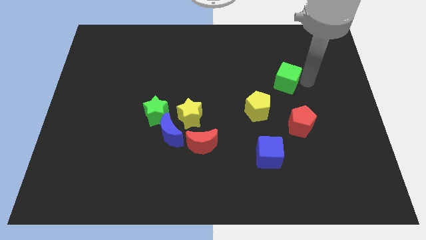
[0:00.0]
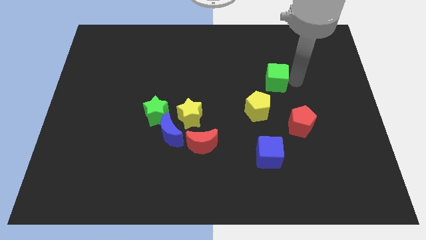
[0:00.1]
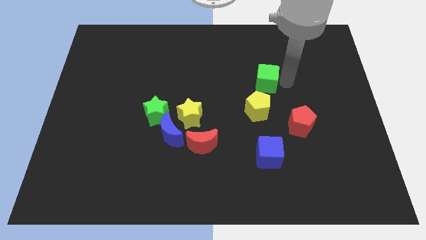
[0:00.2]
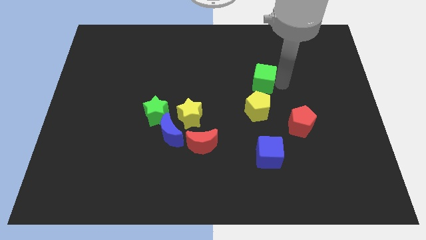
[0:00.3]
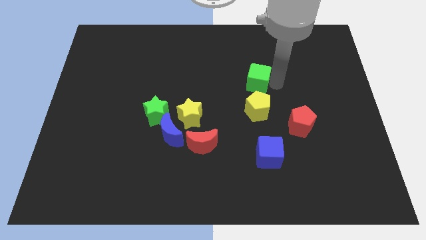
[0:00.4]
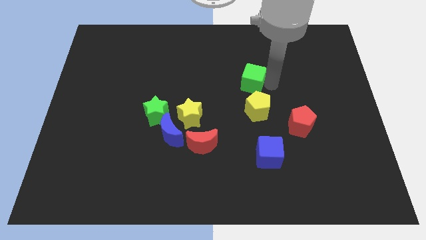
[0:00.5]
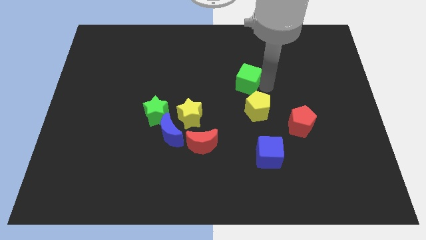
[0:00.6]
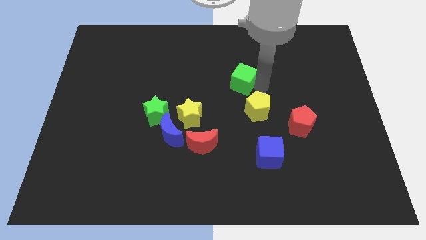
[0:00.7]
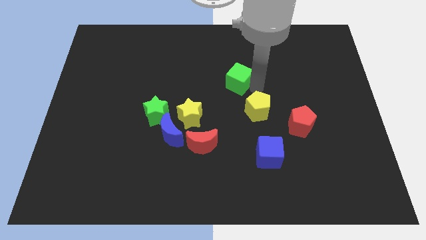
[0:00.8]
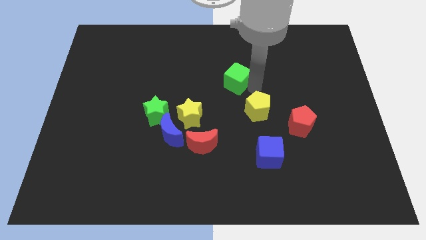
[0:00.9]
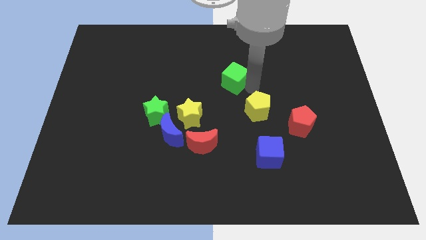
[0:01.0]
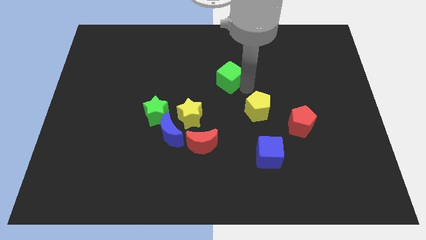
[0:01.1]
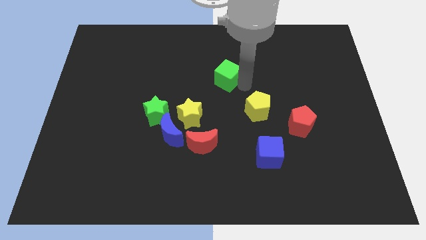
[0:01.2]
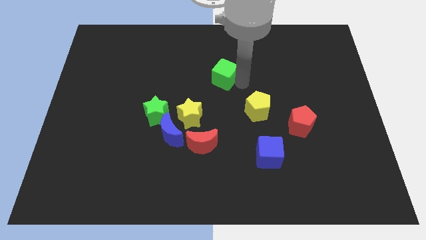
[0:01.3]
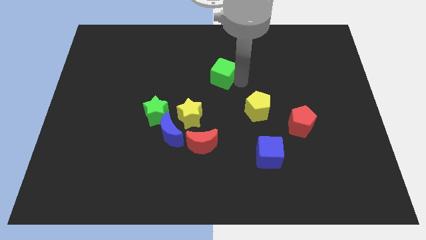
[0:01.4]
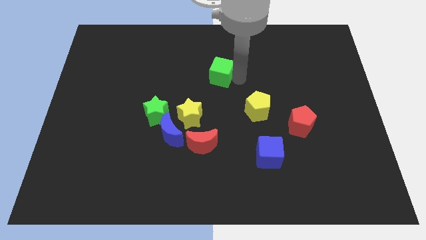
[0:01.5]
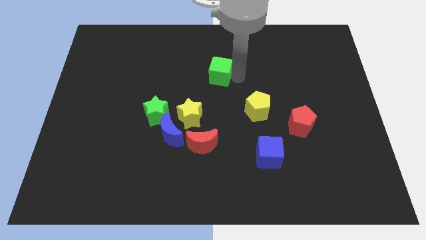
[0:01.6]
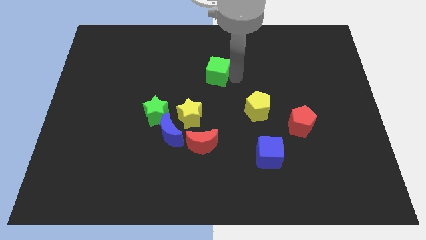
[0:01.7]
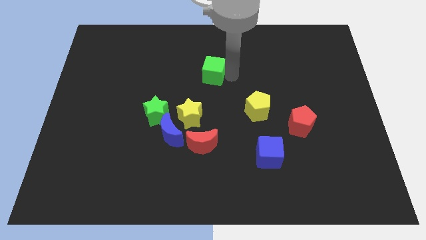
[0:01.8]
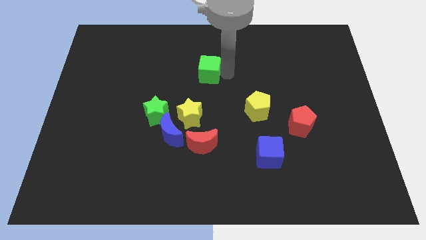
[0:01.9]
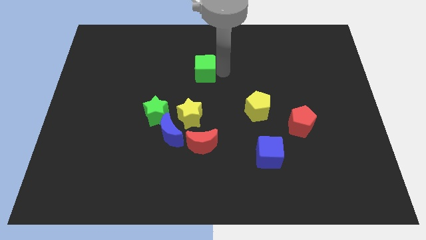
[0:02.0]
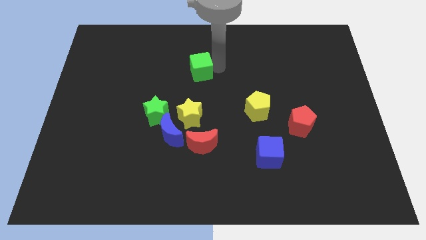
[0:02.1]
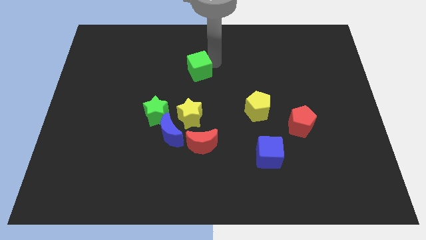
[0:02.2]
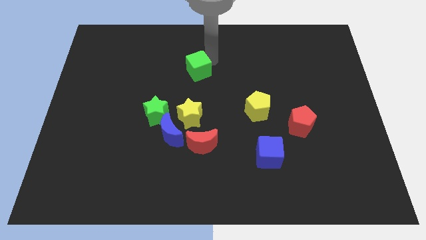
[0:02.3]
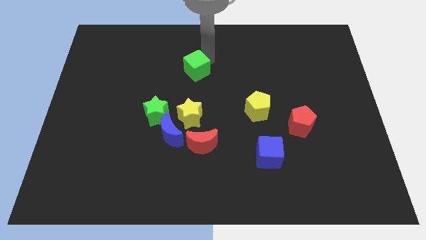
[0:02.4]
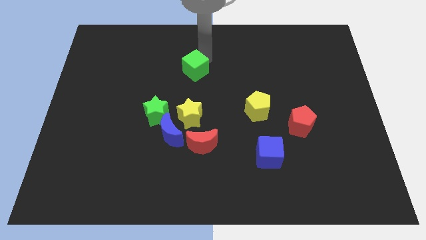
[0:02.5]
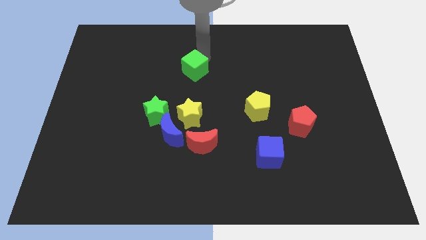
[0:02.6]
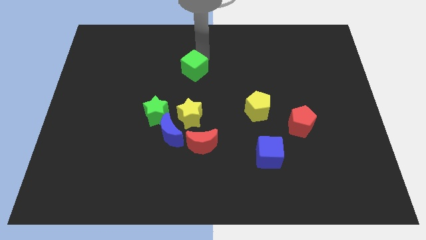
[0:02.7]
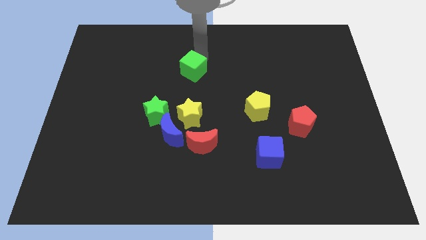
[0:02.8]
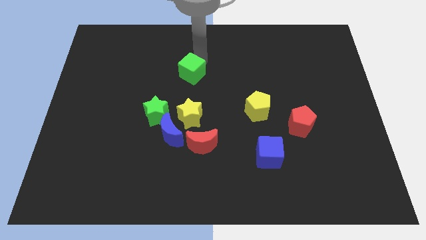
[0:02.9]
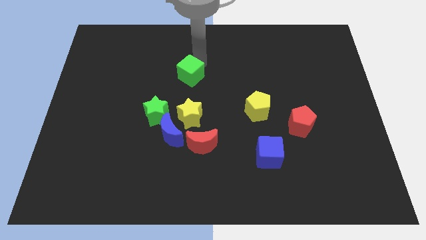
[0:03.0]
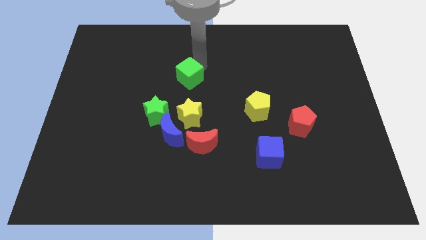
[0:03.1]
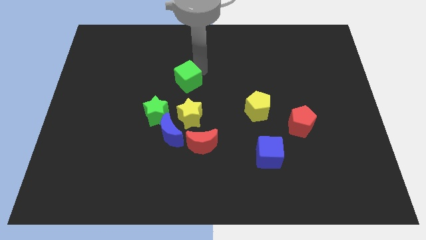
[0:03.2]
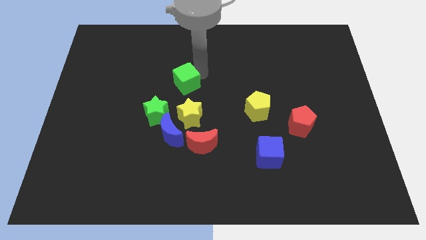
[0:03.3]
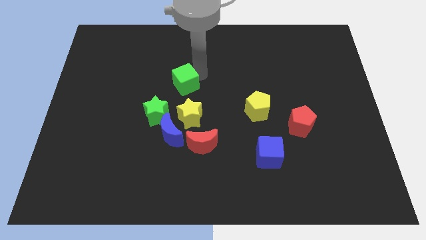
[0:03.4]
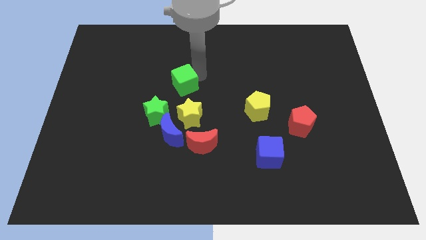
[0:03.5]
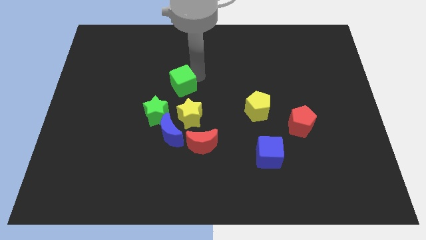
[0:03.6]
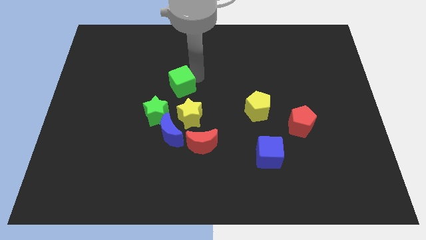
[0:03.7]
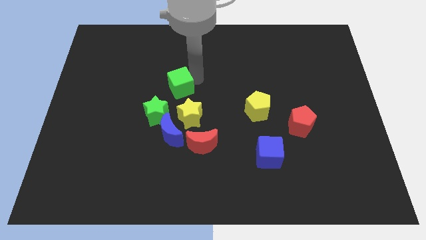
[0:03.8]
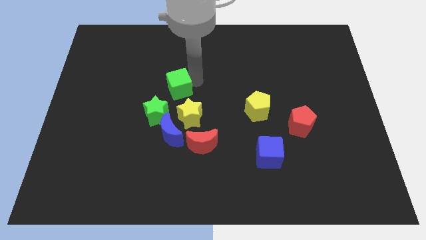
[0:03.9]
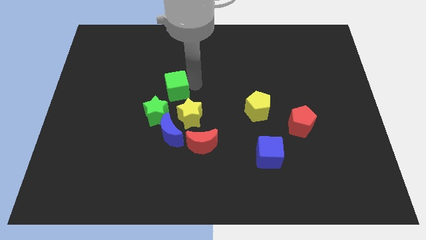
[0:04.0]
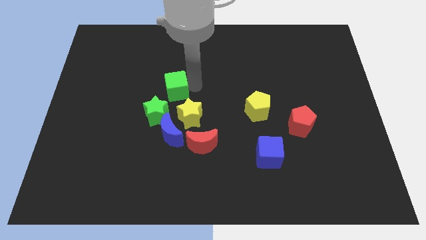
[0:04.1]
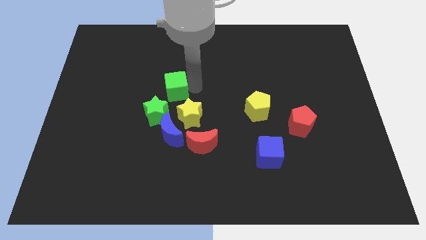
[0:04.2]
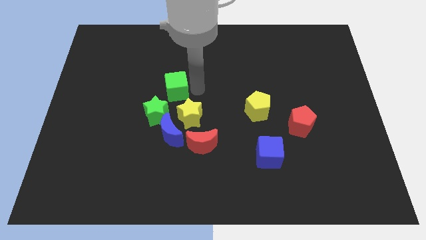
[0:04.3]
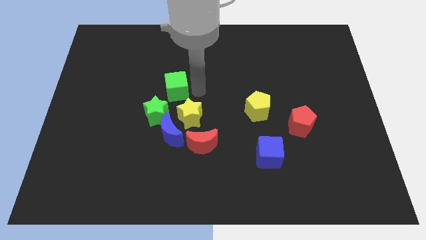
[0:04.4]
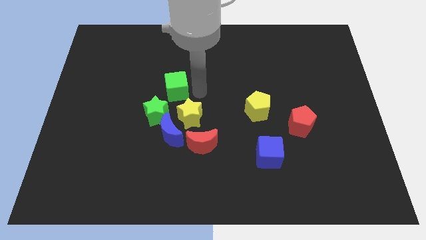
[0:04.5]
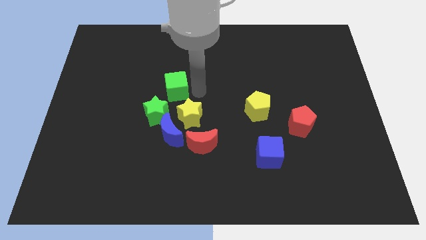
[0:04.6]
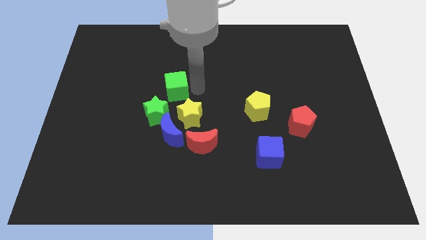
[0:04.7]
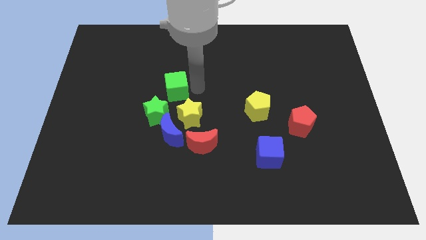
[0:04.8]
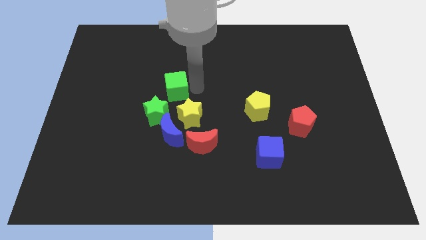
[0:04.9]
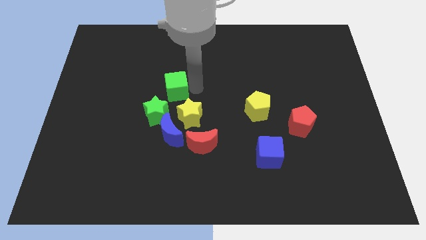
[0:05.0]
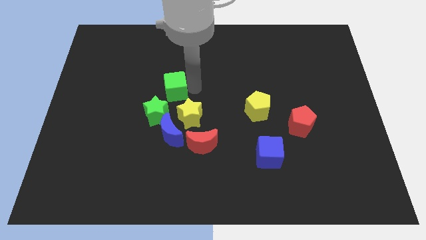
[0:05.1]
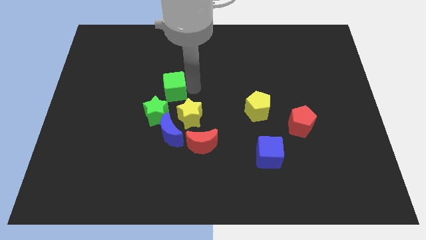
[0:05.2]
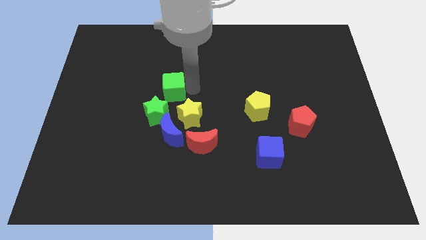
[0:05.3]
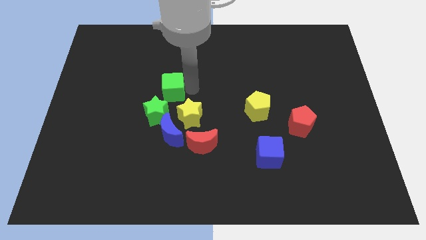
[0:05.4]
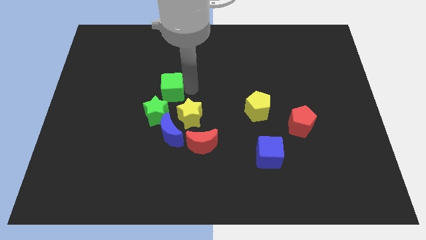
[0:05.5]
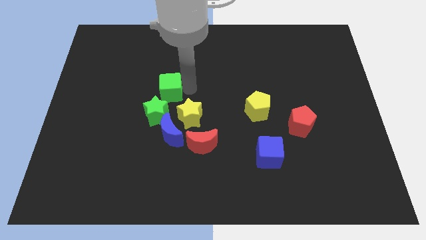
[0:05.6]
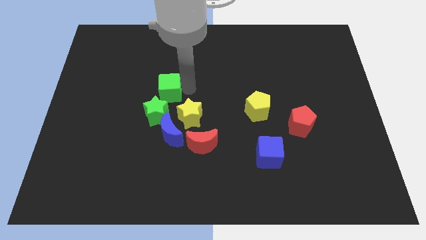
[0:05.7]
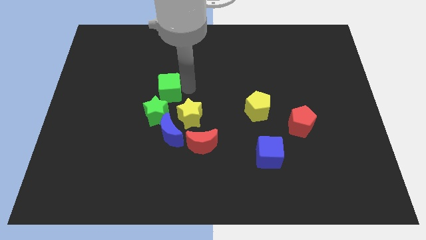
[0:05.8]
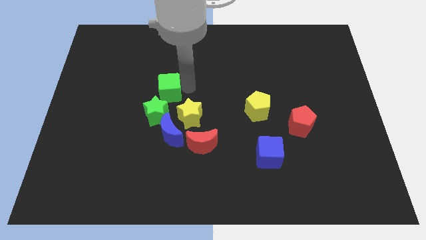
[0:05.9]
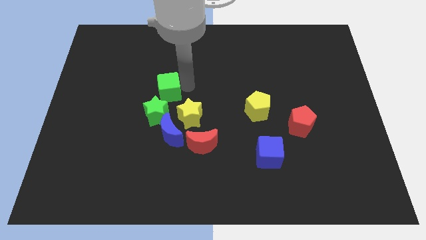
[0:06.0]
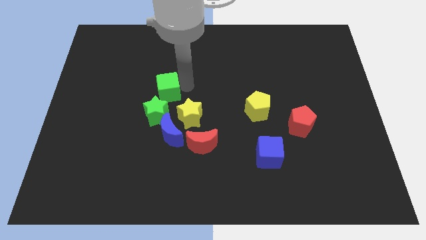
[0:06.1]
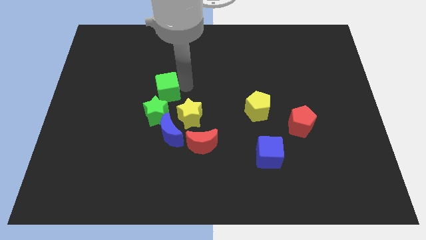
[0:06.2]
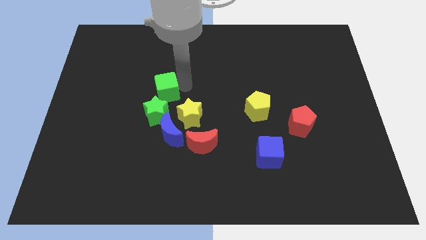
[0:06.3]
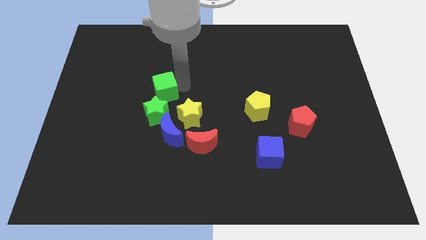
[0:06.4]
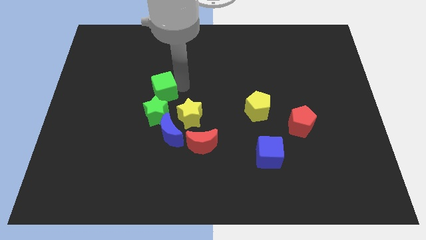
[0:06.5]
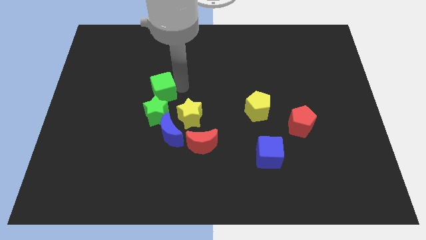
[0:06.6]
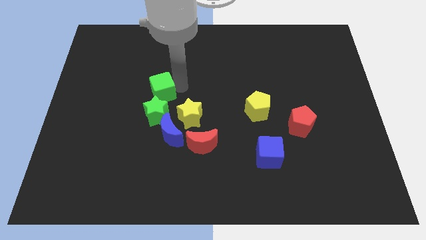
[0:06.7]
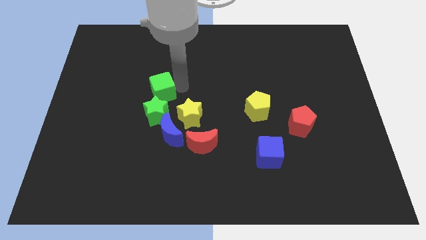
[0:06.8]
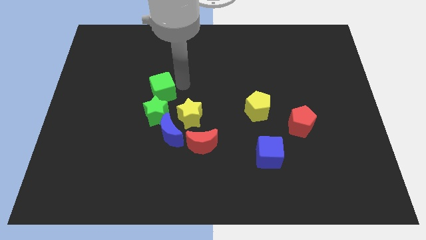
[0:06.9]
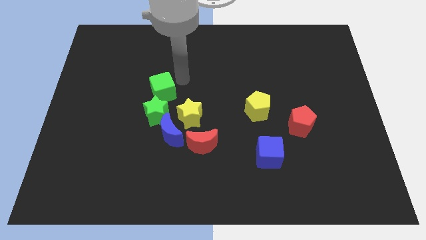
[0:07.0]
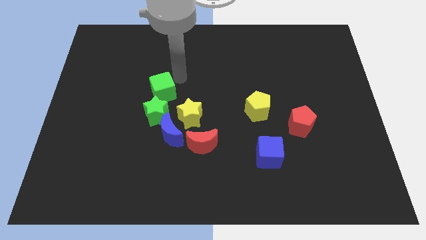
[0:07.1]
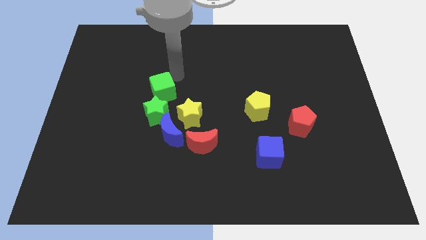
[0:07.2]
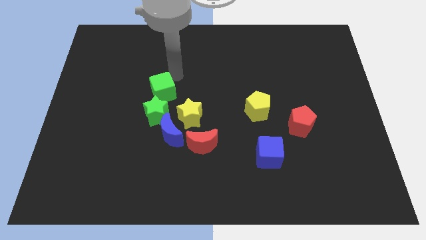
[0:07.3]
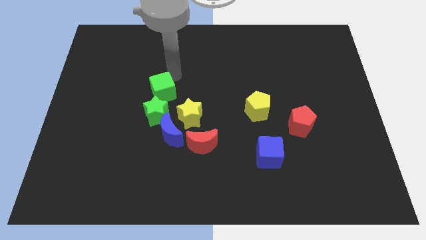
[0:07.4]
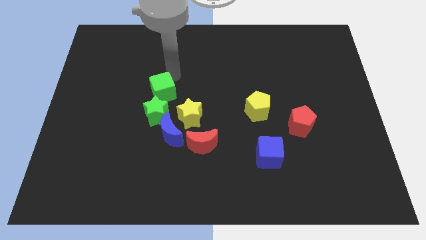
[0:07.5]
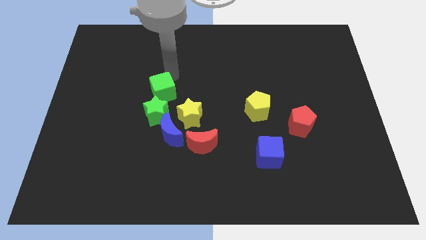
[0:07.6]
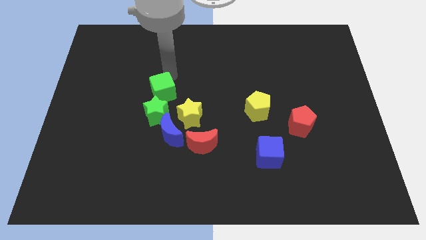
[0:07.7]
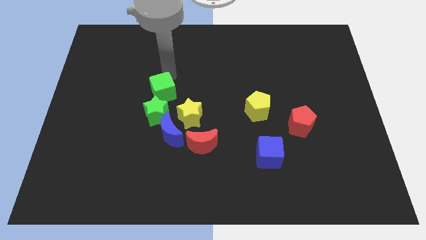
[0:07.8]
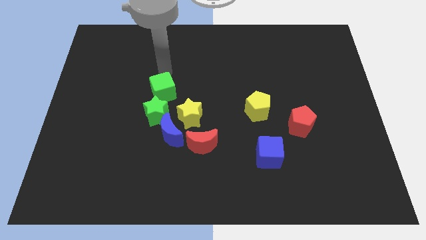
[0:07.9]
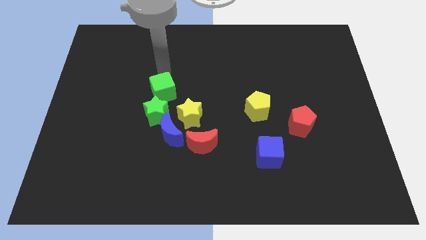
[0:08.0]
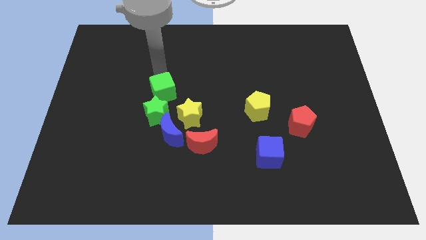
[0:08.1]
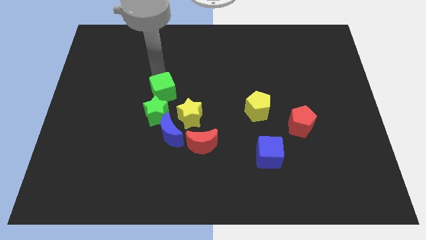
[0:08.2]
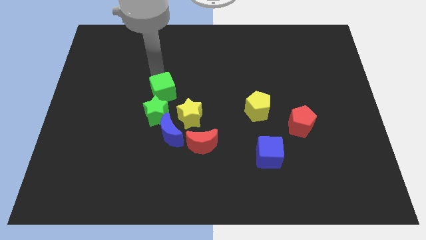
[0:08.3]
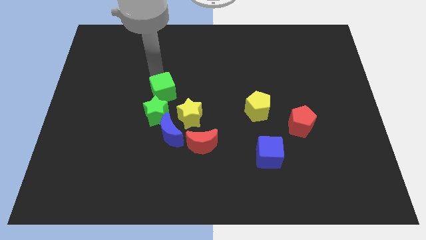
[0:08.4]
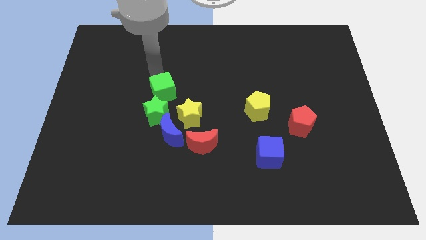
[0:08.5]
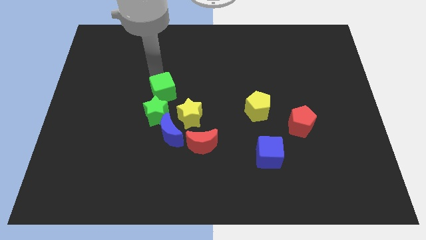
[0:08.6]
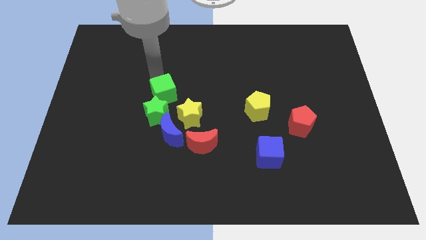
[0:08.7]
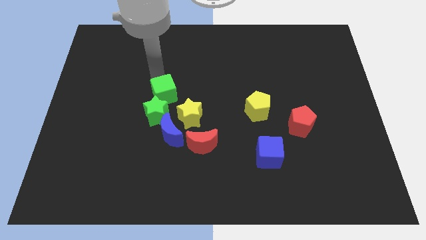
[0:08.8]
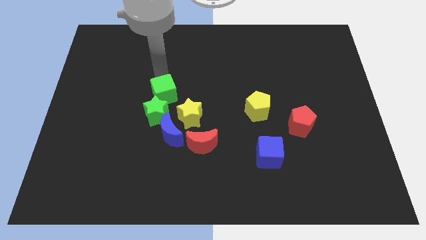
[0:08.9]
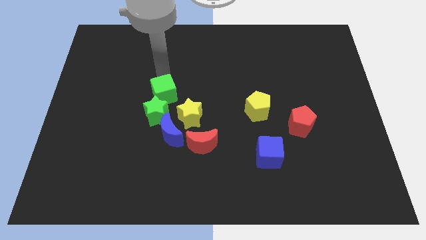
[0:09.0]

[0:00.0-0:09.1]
place the green cube to the top of the green star
